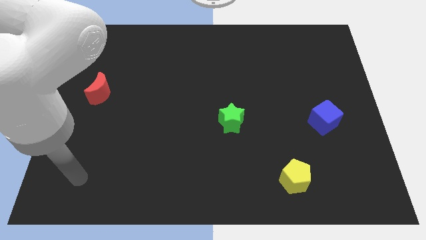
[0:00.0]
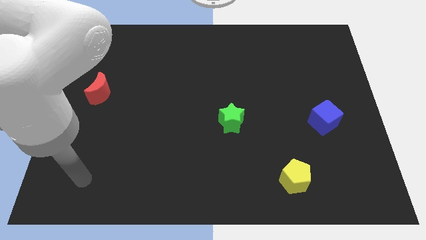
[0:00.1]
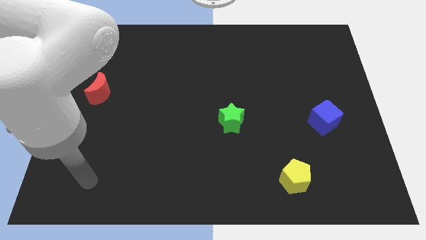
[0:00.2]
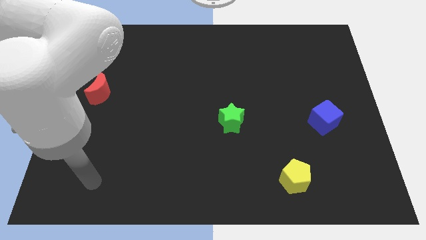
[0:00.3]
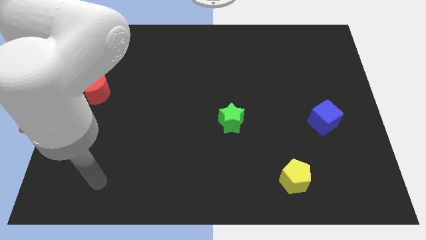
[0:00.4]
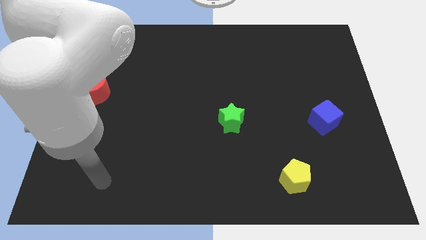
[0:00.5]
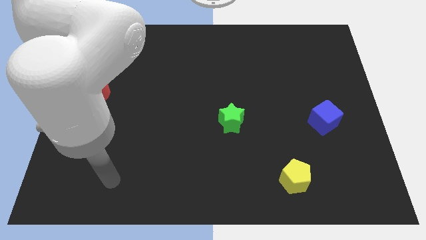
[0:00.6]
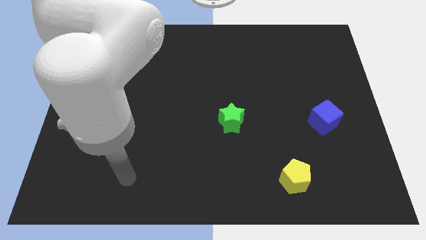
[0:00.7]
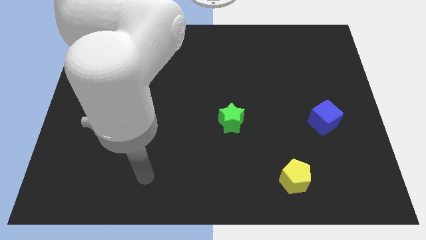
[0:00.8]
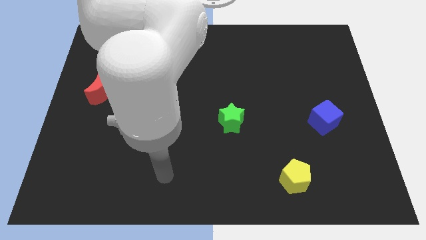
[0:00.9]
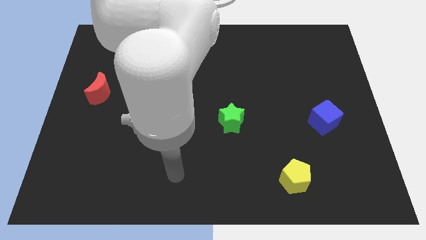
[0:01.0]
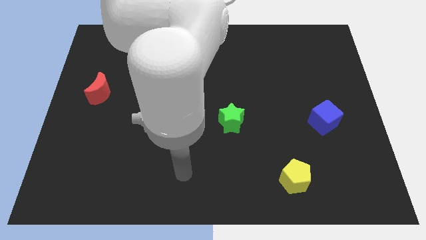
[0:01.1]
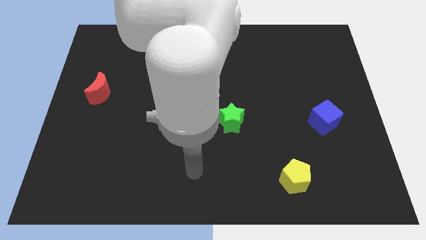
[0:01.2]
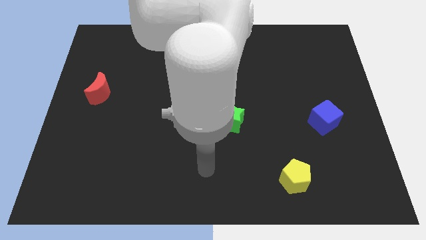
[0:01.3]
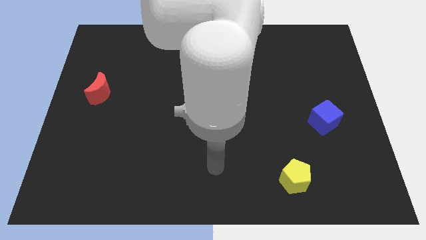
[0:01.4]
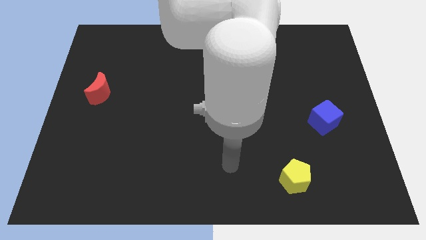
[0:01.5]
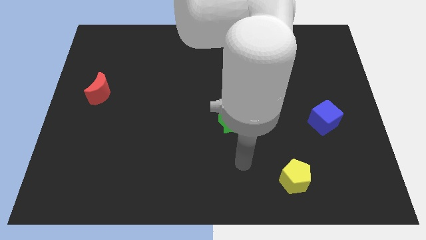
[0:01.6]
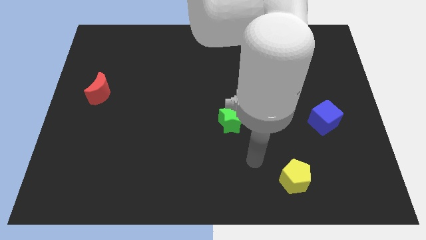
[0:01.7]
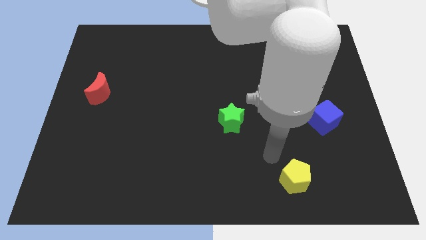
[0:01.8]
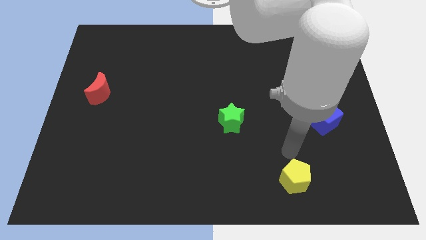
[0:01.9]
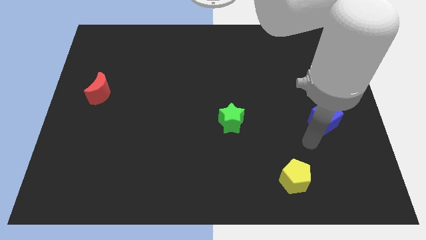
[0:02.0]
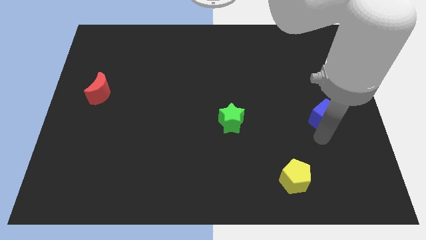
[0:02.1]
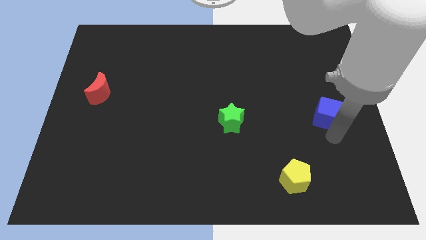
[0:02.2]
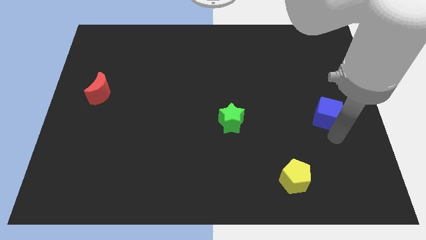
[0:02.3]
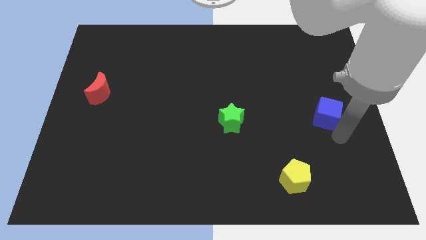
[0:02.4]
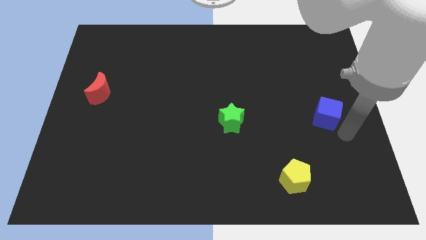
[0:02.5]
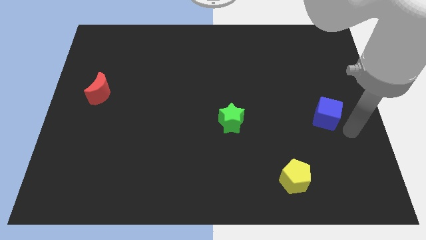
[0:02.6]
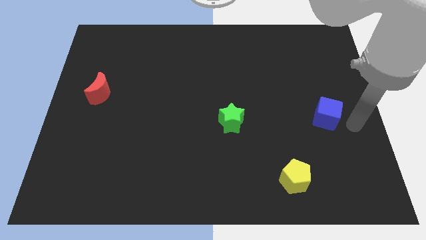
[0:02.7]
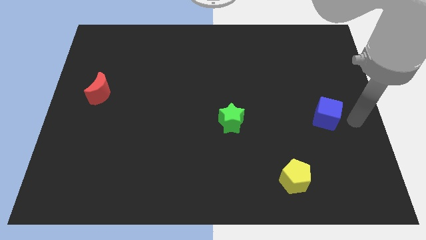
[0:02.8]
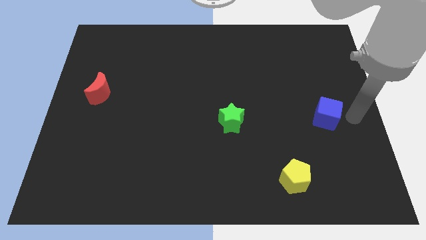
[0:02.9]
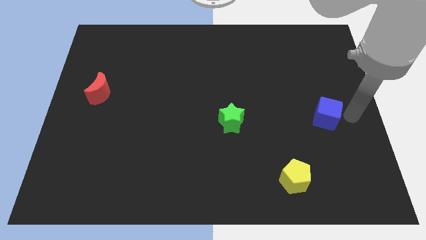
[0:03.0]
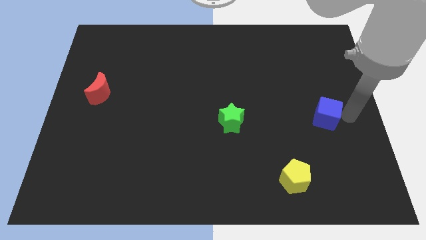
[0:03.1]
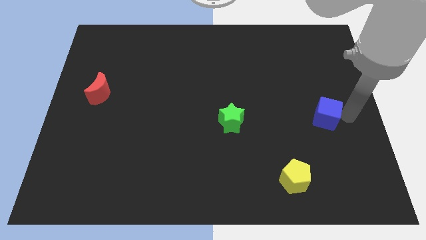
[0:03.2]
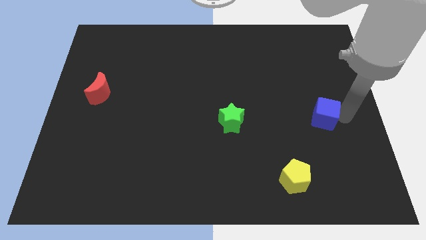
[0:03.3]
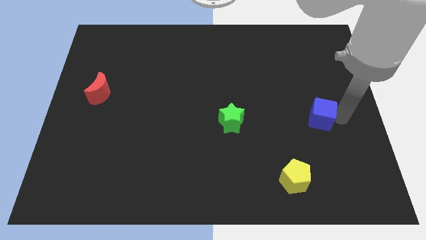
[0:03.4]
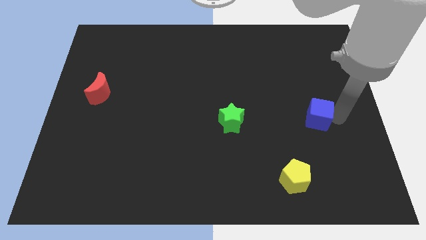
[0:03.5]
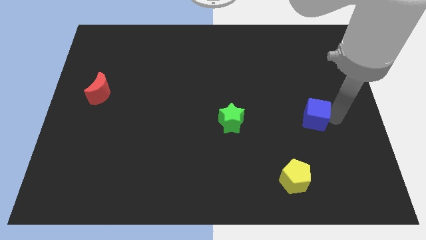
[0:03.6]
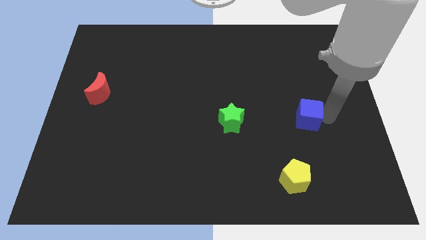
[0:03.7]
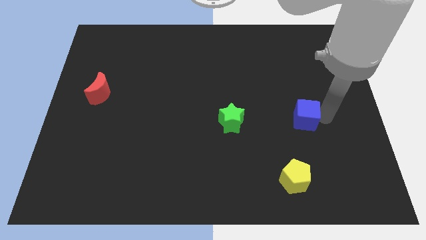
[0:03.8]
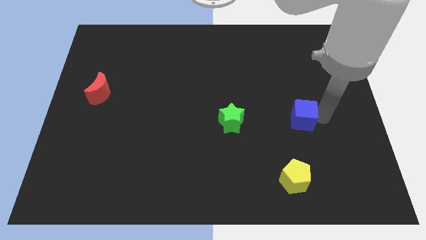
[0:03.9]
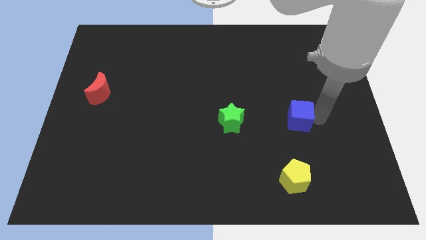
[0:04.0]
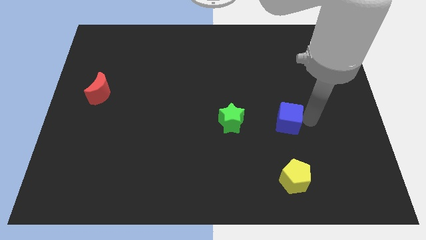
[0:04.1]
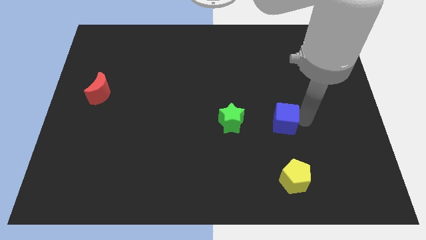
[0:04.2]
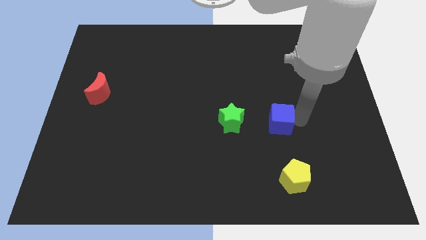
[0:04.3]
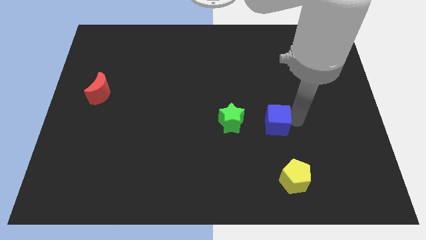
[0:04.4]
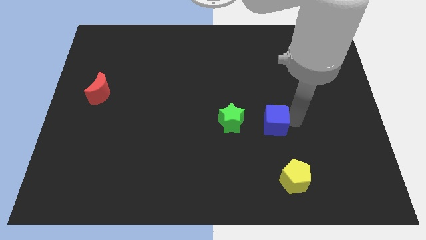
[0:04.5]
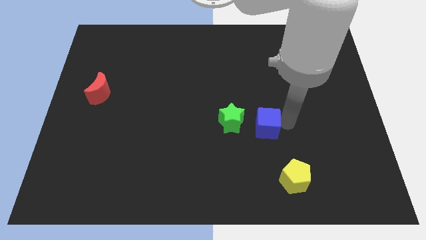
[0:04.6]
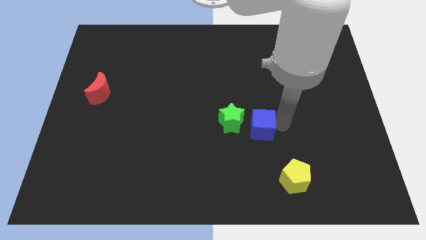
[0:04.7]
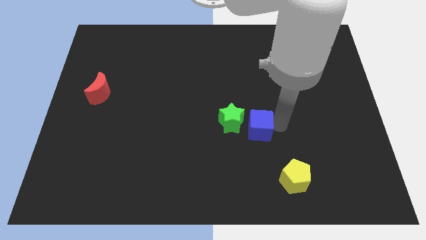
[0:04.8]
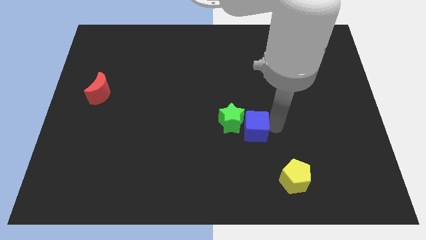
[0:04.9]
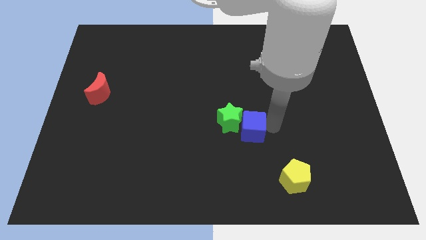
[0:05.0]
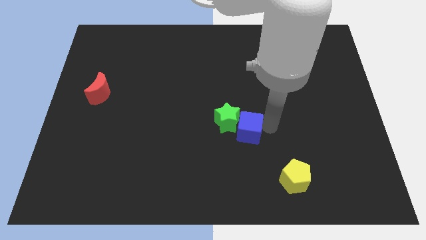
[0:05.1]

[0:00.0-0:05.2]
move the cube towards the star

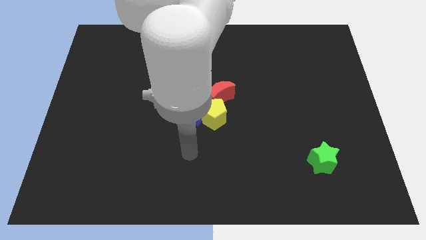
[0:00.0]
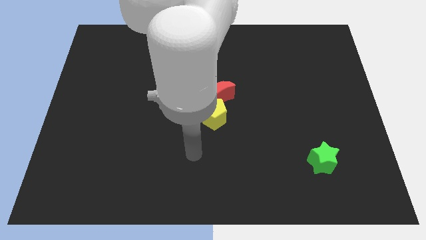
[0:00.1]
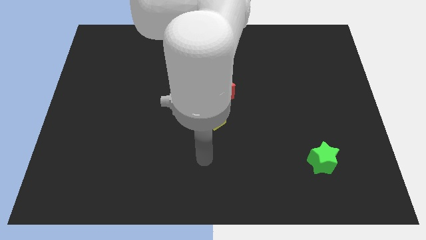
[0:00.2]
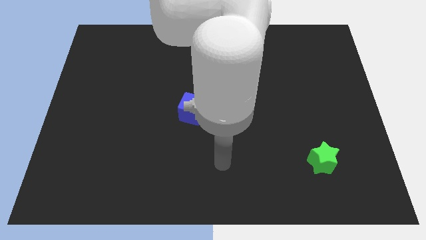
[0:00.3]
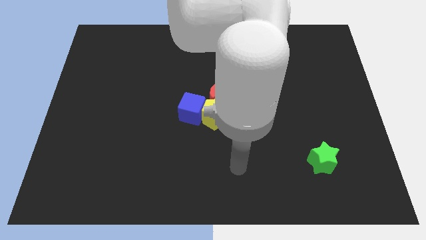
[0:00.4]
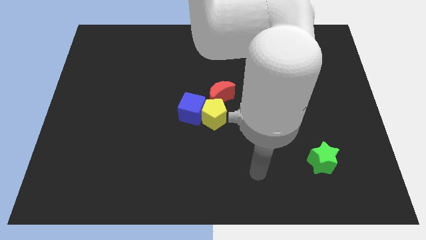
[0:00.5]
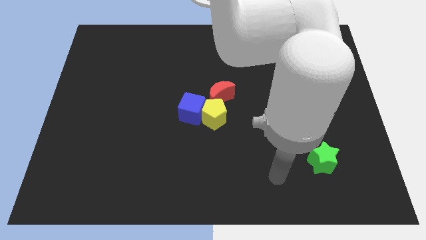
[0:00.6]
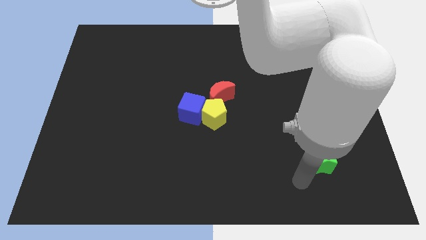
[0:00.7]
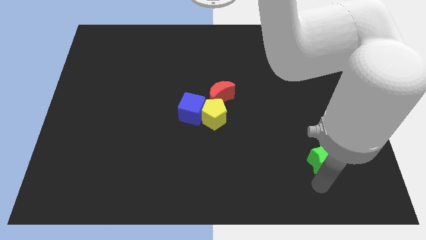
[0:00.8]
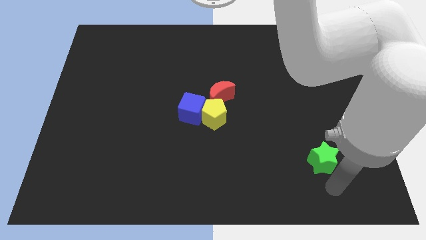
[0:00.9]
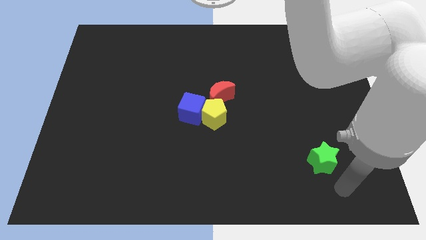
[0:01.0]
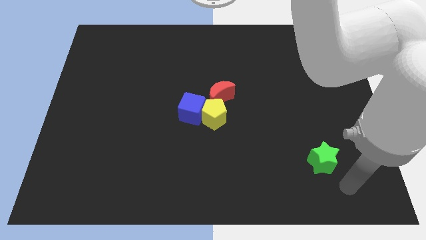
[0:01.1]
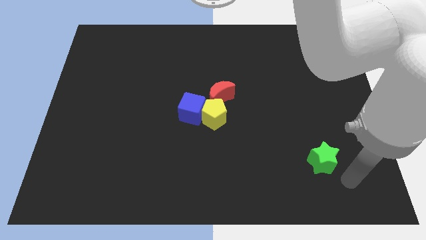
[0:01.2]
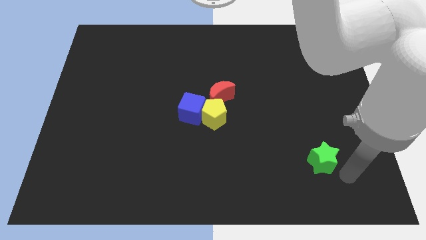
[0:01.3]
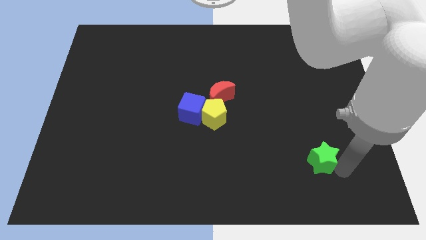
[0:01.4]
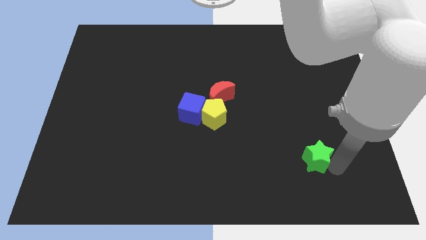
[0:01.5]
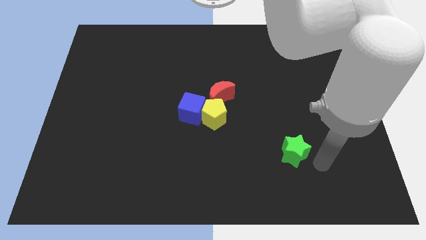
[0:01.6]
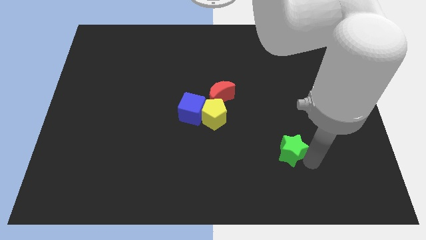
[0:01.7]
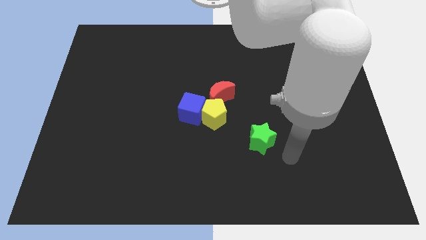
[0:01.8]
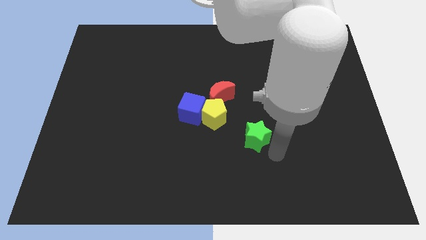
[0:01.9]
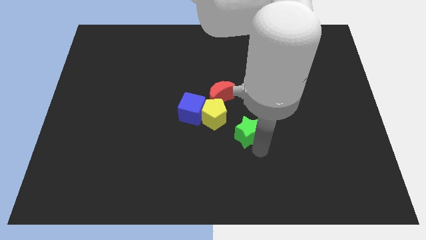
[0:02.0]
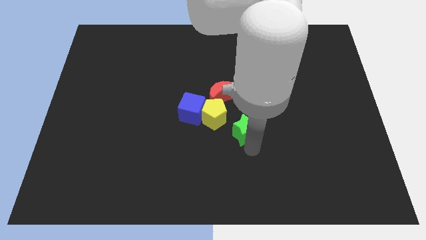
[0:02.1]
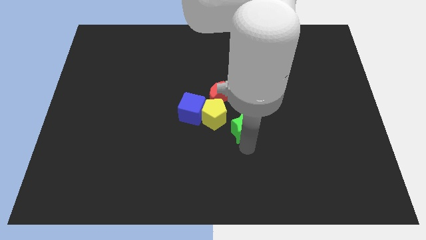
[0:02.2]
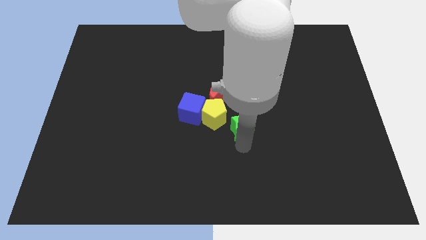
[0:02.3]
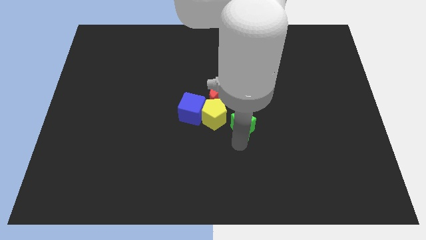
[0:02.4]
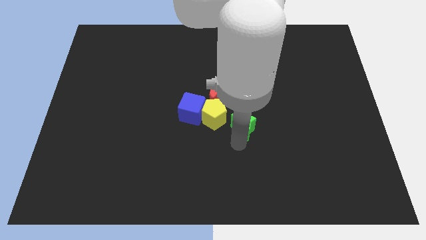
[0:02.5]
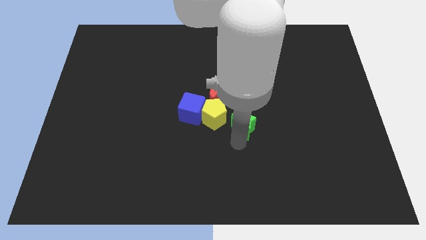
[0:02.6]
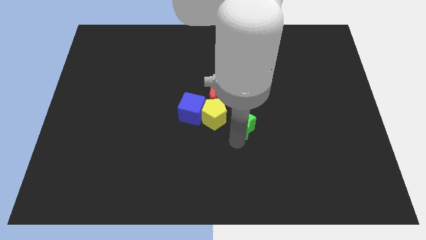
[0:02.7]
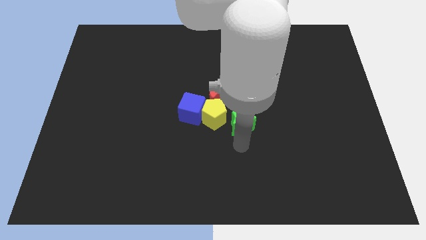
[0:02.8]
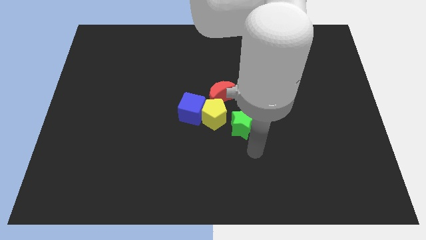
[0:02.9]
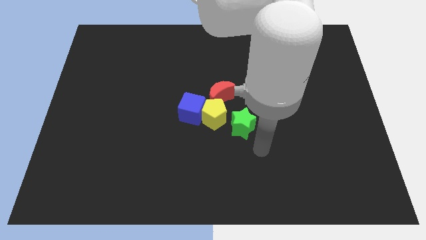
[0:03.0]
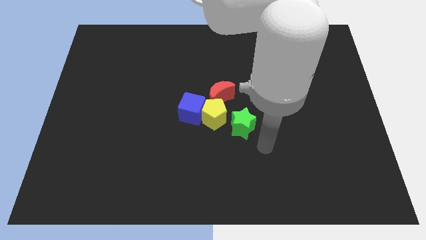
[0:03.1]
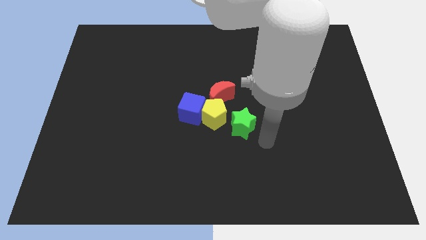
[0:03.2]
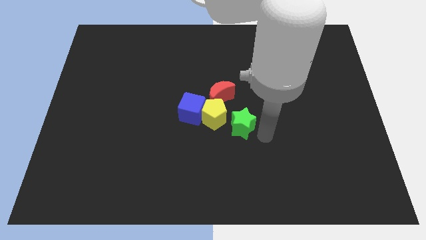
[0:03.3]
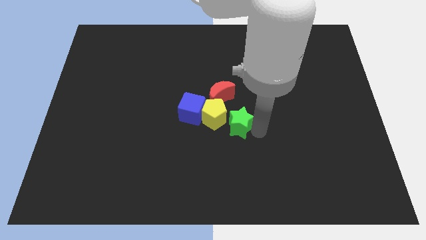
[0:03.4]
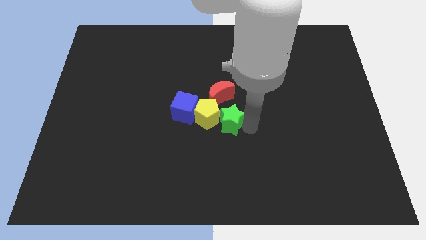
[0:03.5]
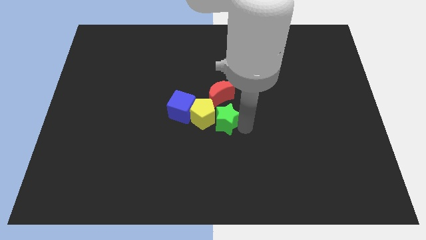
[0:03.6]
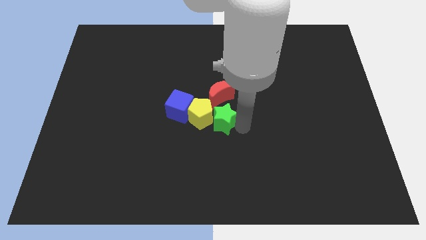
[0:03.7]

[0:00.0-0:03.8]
slide the green star to the yellow block
